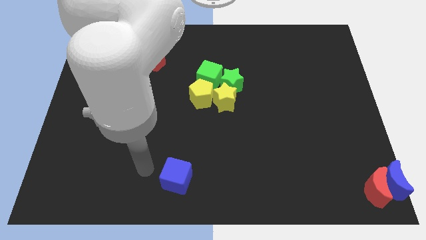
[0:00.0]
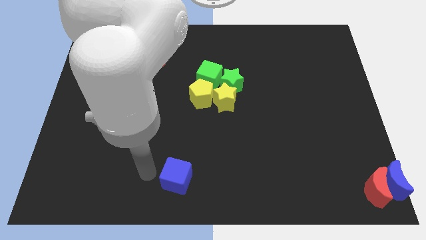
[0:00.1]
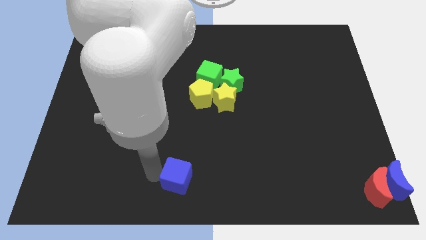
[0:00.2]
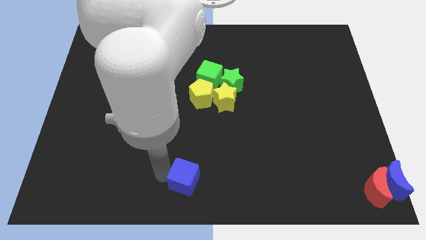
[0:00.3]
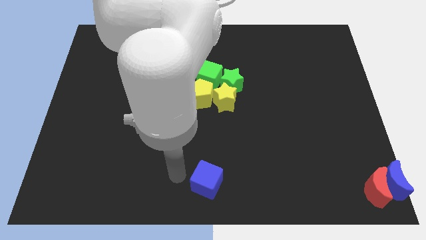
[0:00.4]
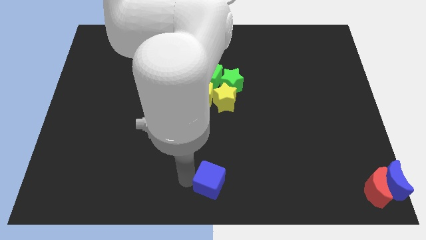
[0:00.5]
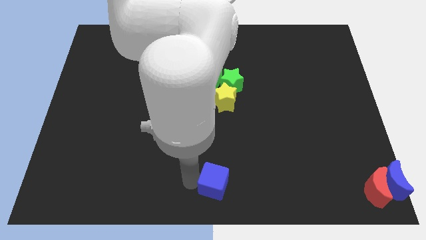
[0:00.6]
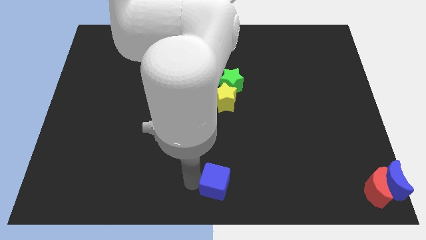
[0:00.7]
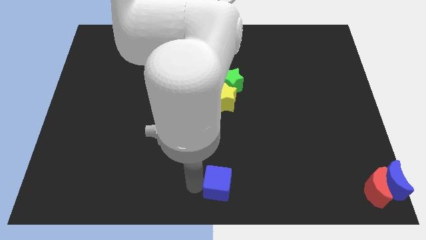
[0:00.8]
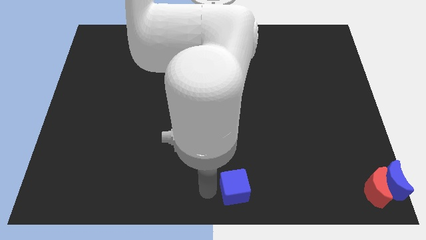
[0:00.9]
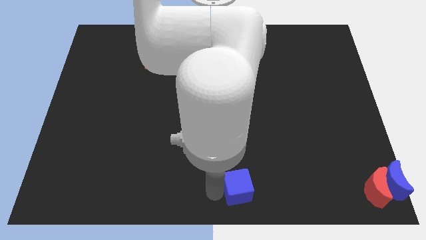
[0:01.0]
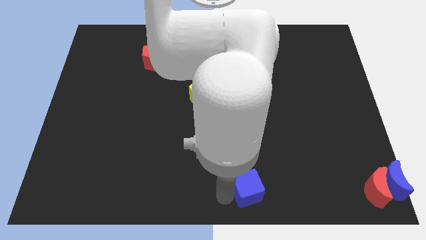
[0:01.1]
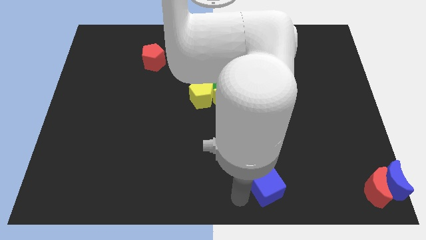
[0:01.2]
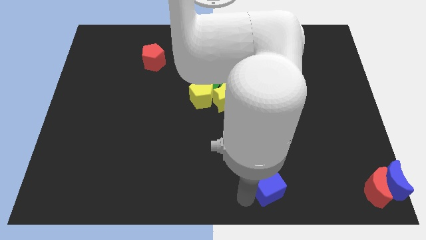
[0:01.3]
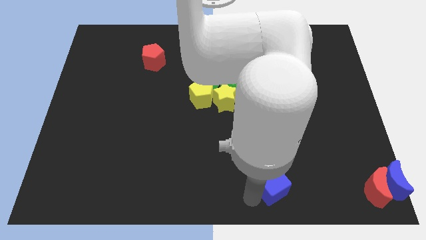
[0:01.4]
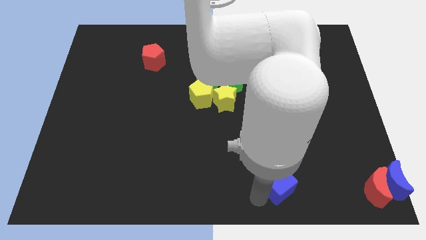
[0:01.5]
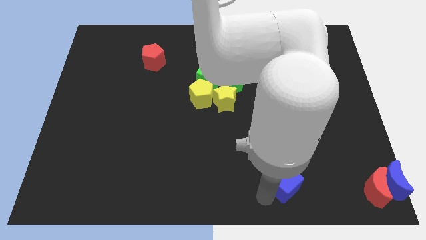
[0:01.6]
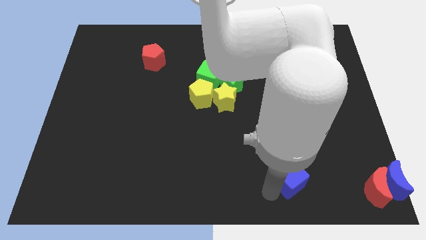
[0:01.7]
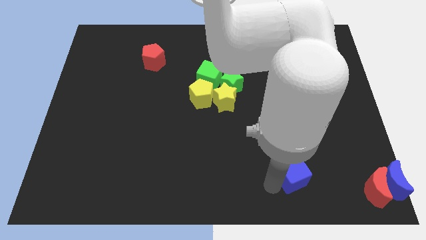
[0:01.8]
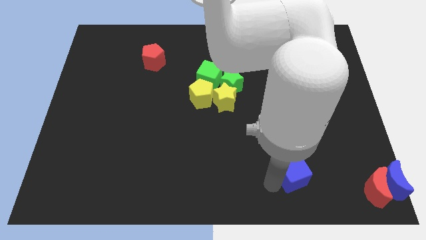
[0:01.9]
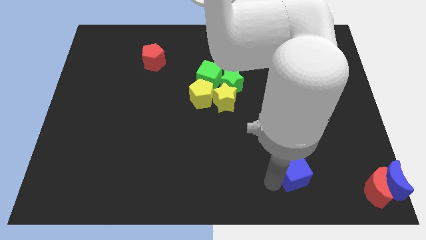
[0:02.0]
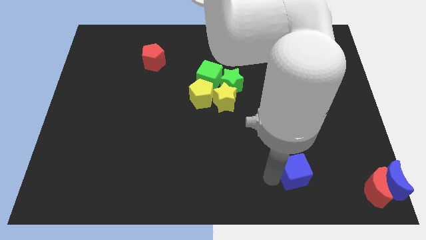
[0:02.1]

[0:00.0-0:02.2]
move the blue cube towards the red crescent

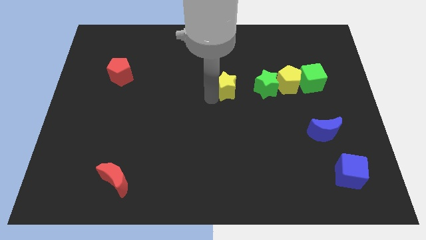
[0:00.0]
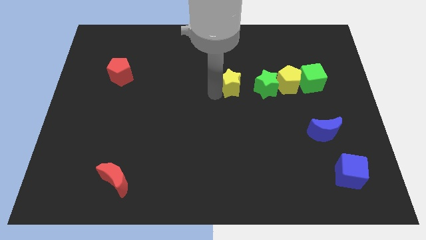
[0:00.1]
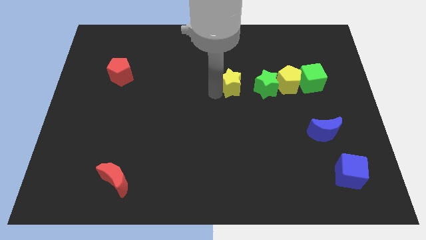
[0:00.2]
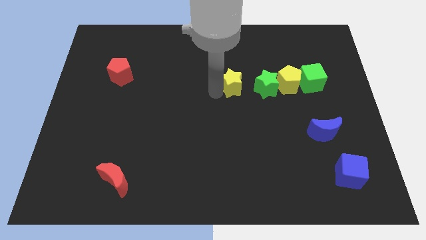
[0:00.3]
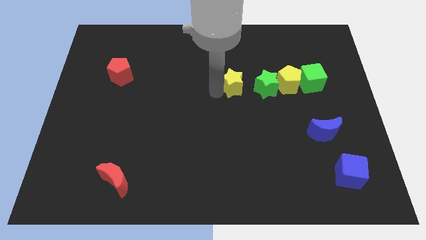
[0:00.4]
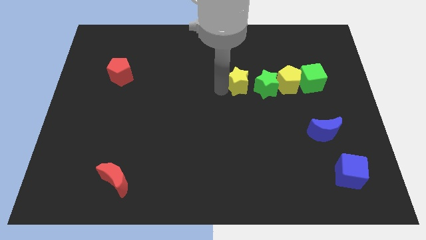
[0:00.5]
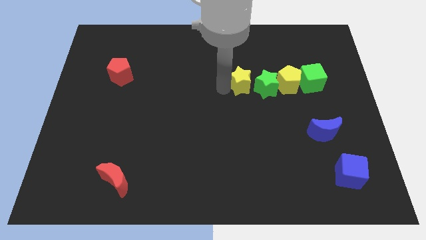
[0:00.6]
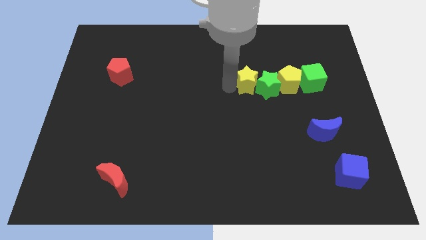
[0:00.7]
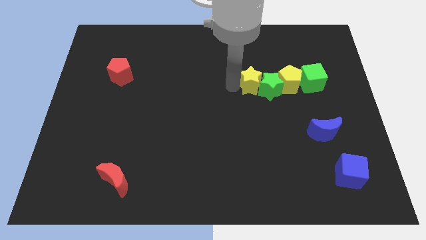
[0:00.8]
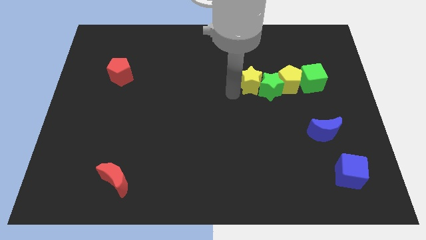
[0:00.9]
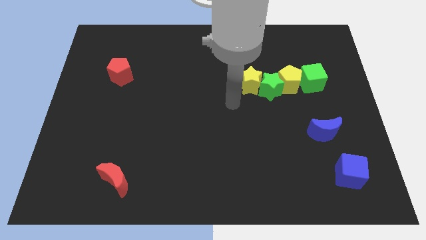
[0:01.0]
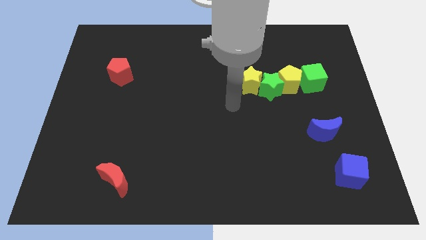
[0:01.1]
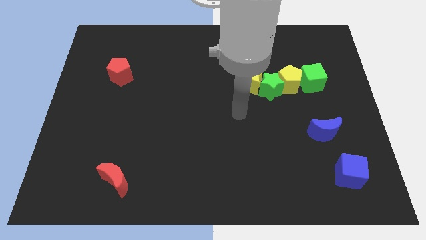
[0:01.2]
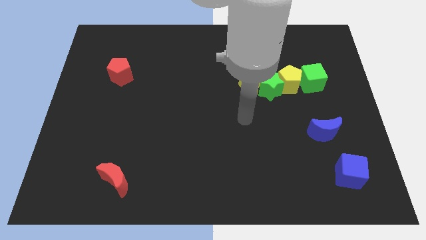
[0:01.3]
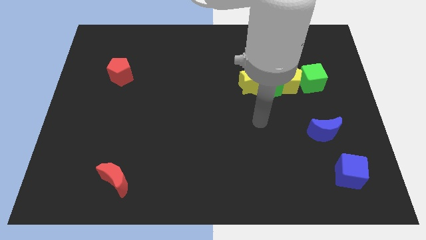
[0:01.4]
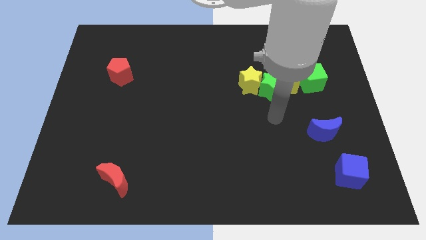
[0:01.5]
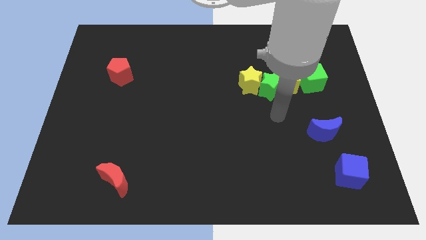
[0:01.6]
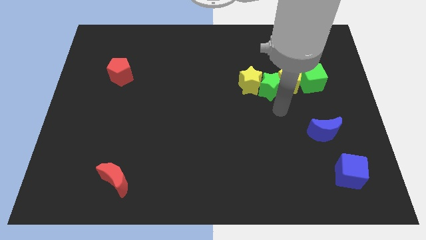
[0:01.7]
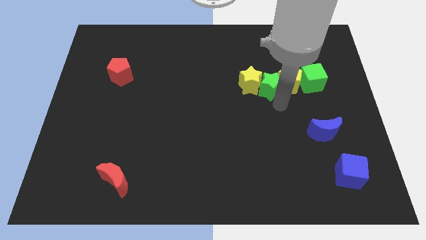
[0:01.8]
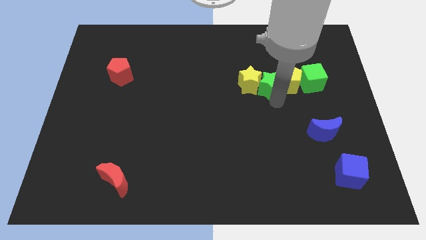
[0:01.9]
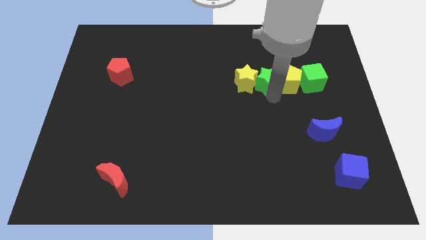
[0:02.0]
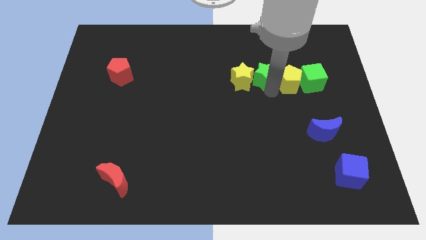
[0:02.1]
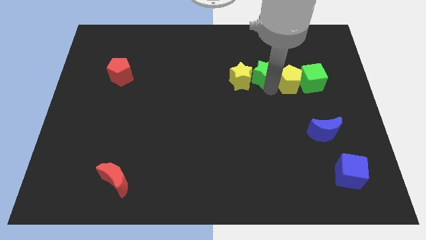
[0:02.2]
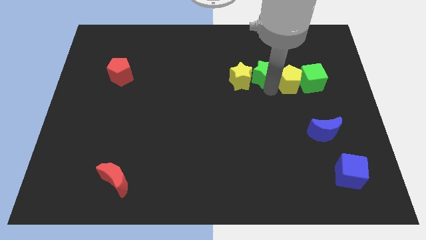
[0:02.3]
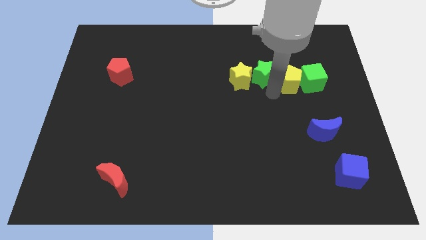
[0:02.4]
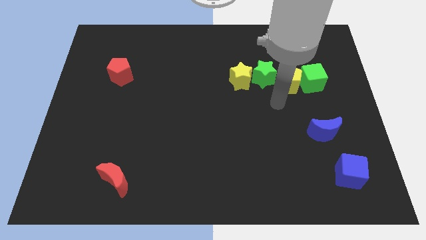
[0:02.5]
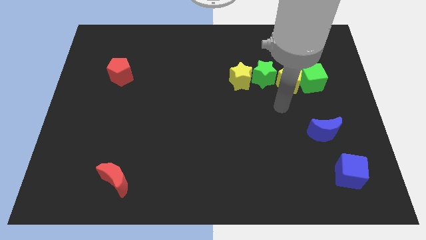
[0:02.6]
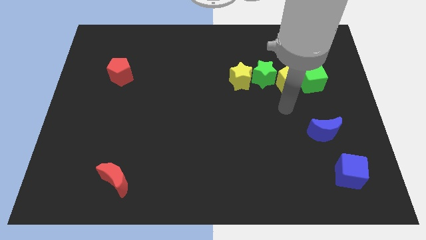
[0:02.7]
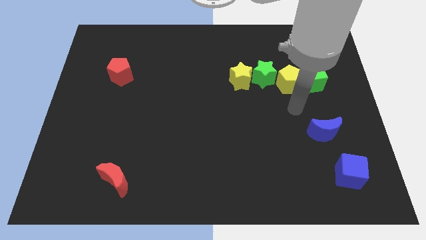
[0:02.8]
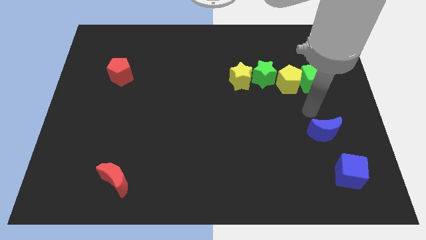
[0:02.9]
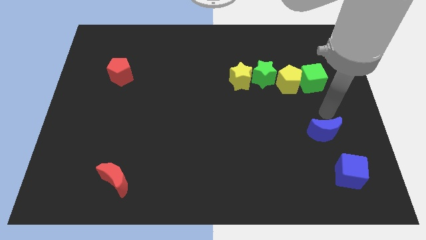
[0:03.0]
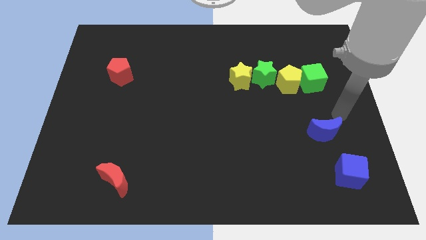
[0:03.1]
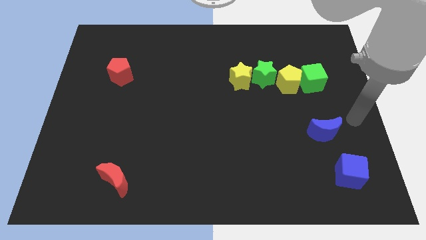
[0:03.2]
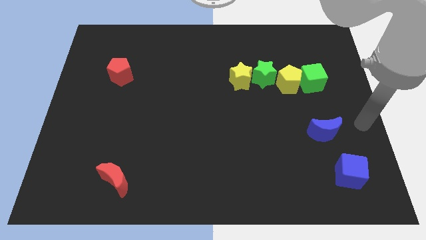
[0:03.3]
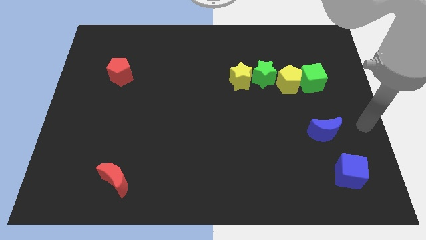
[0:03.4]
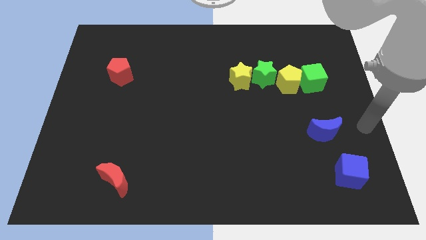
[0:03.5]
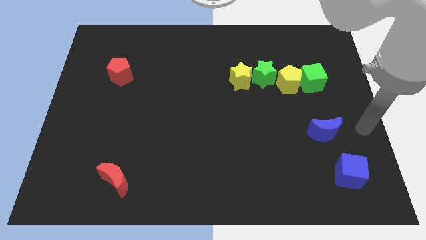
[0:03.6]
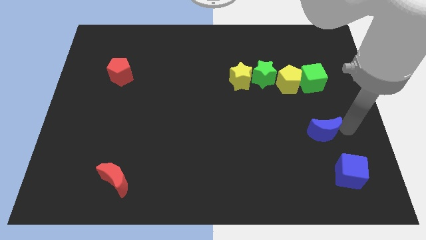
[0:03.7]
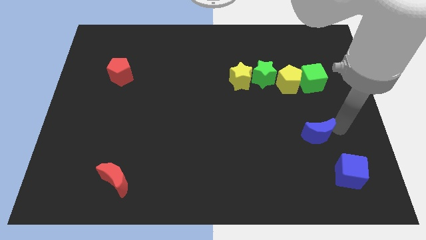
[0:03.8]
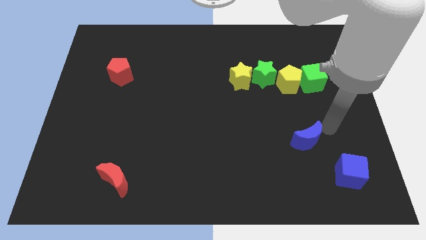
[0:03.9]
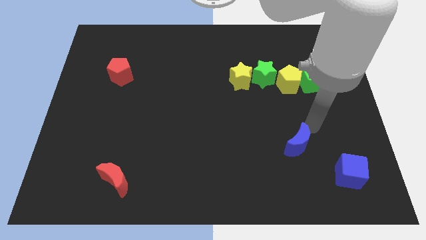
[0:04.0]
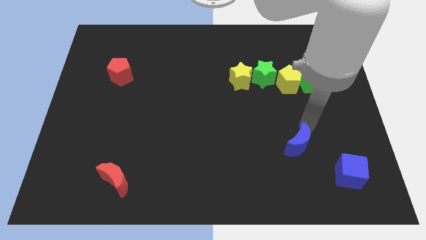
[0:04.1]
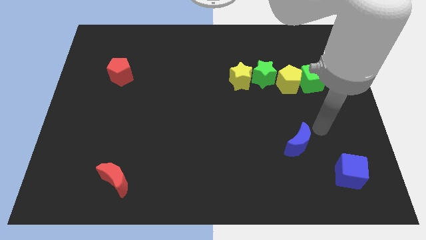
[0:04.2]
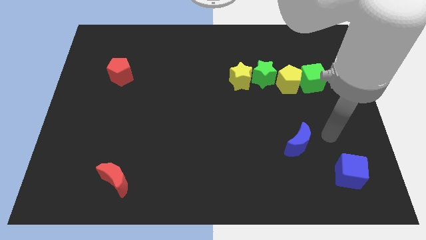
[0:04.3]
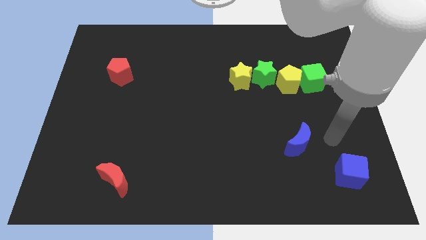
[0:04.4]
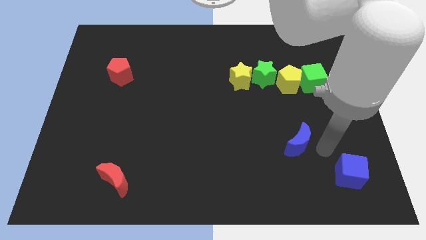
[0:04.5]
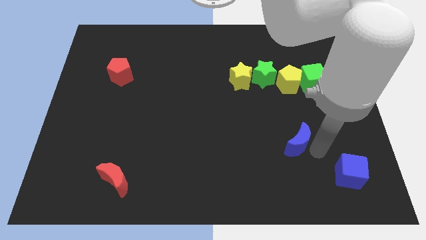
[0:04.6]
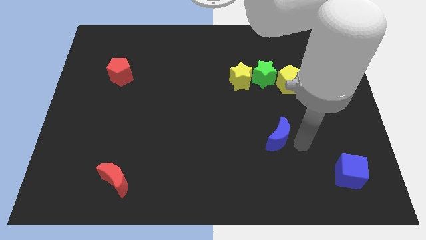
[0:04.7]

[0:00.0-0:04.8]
push the blue moon diagonally to the top left of the blue cube

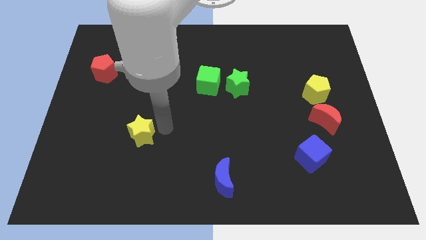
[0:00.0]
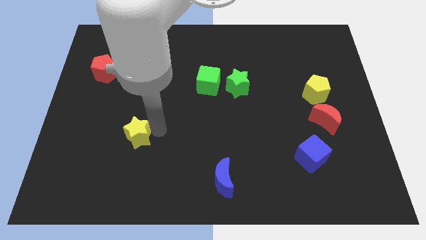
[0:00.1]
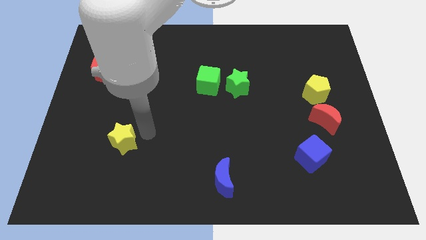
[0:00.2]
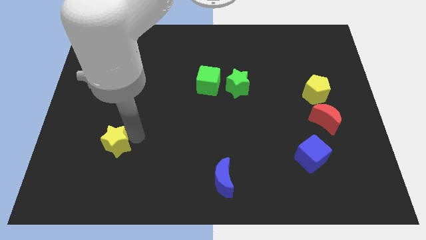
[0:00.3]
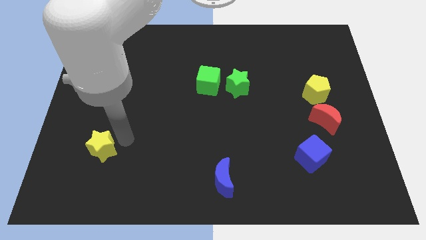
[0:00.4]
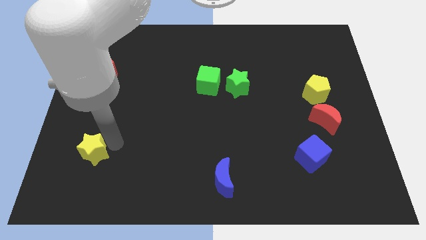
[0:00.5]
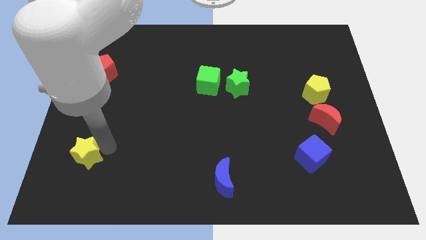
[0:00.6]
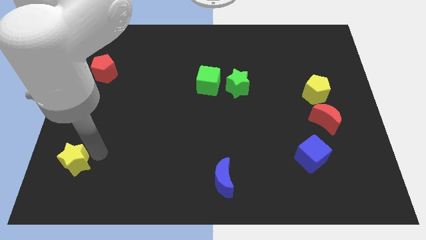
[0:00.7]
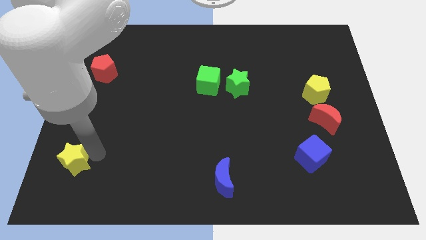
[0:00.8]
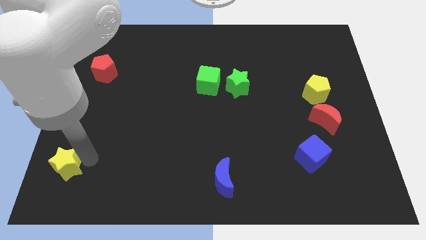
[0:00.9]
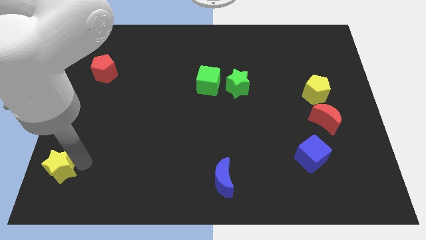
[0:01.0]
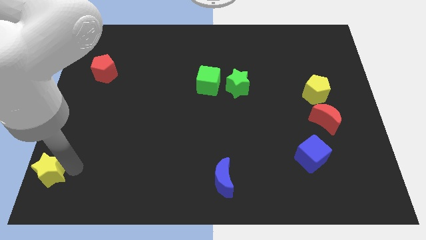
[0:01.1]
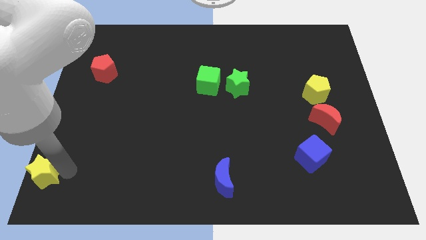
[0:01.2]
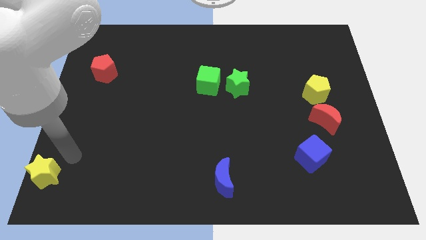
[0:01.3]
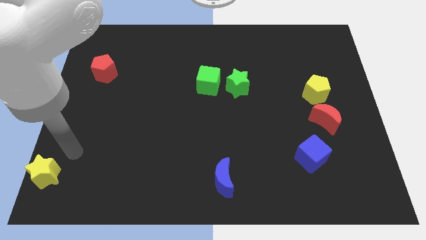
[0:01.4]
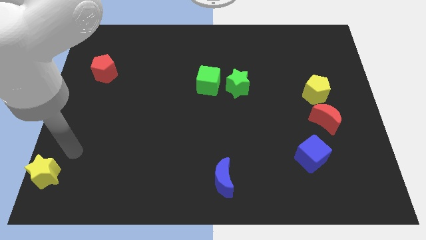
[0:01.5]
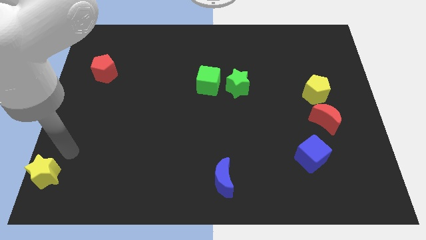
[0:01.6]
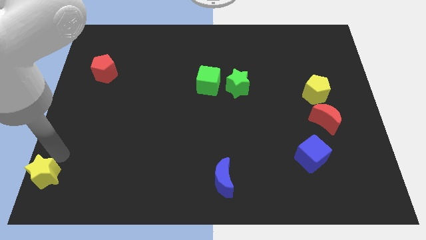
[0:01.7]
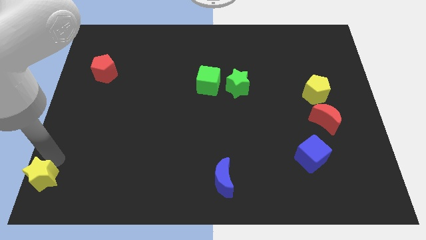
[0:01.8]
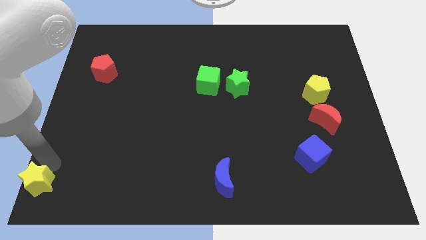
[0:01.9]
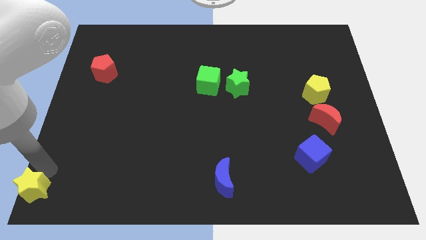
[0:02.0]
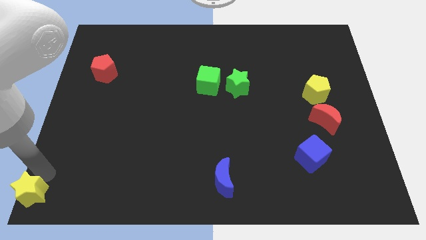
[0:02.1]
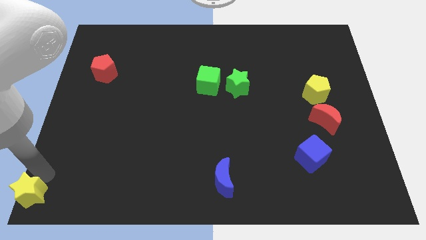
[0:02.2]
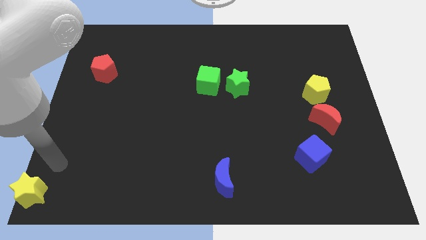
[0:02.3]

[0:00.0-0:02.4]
push the yellow star to the bottom left corner of the board
